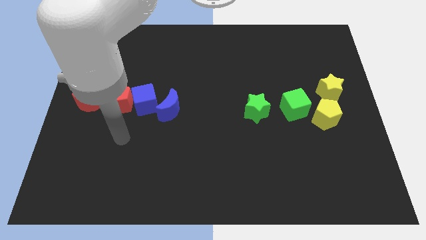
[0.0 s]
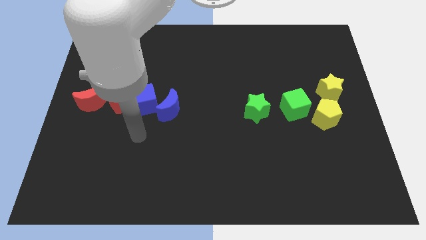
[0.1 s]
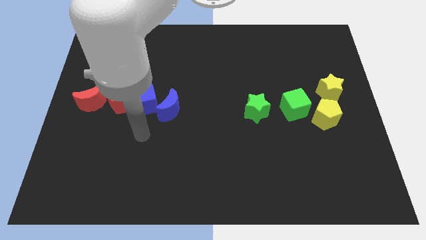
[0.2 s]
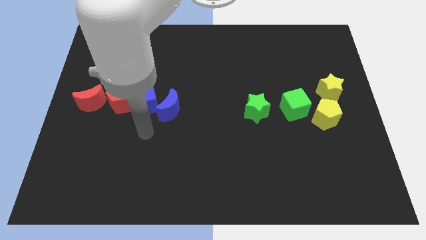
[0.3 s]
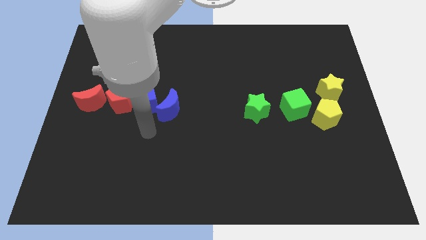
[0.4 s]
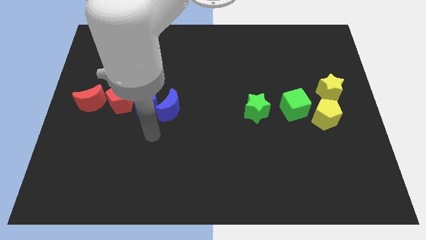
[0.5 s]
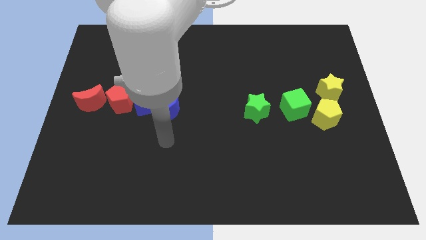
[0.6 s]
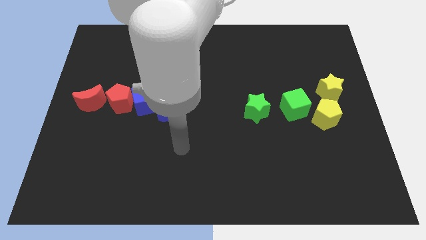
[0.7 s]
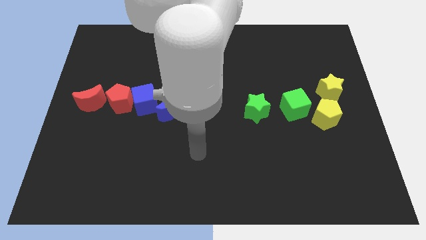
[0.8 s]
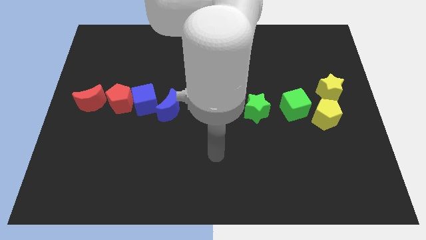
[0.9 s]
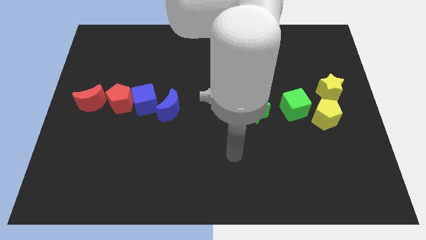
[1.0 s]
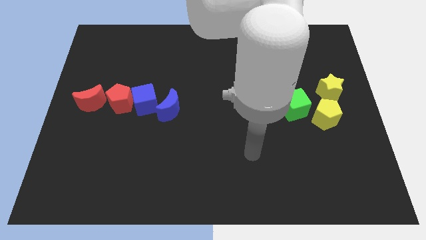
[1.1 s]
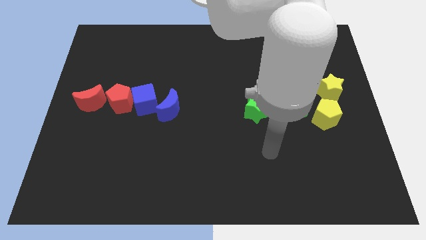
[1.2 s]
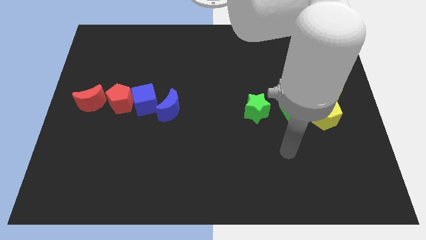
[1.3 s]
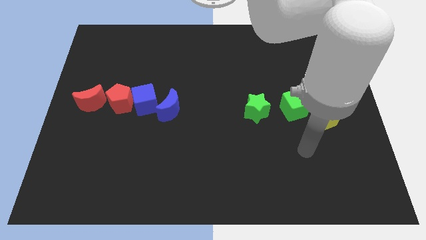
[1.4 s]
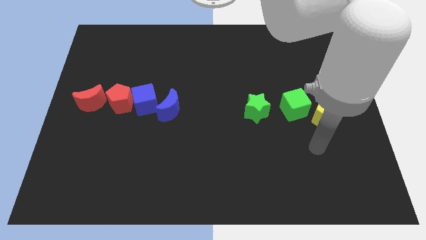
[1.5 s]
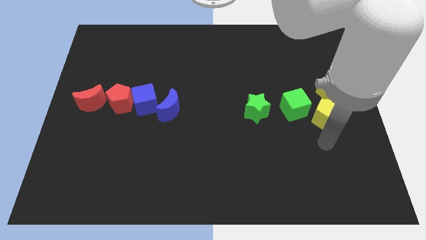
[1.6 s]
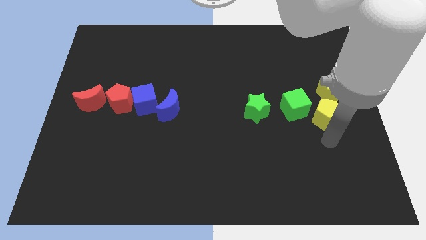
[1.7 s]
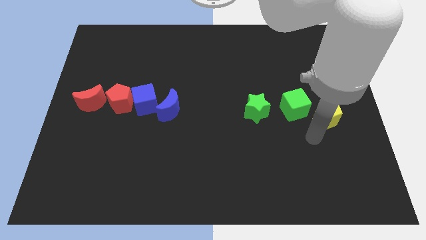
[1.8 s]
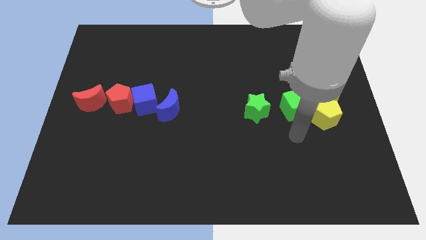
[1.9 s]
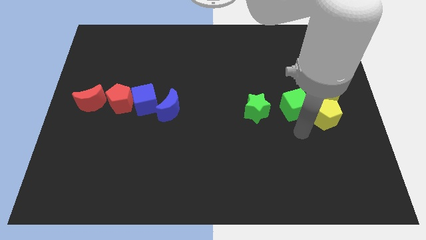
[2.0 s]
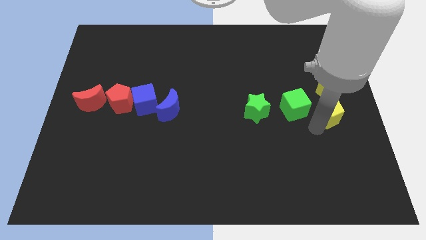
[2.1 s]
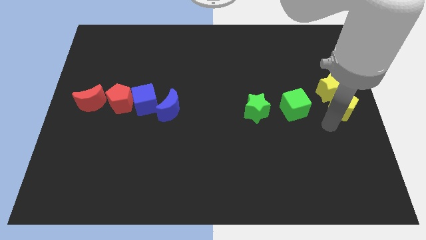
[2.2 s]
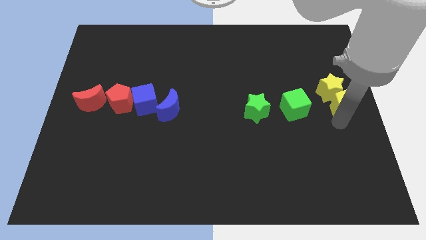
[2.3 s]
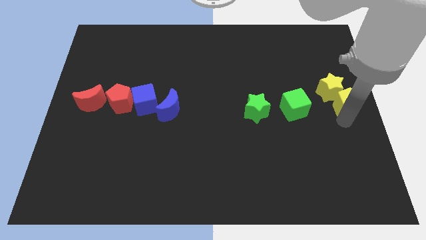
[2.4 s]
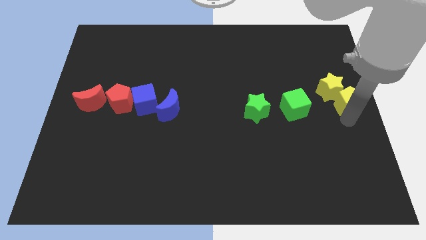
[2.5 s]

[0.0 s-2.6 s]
move yellow pentagon right below the yellow star

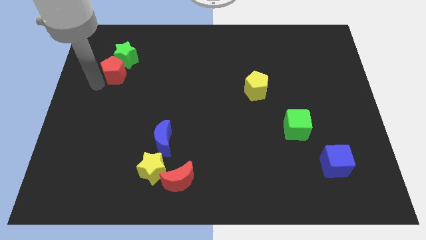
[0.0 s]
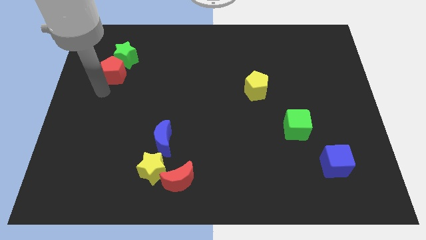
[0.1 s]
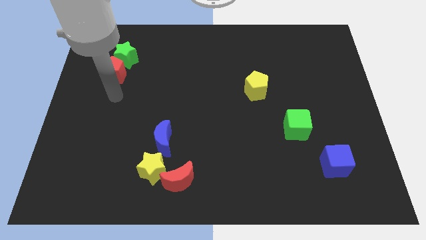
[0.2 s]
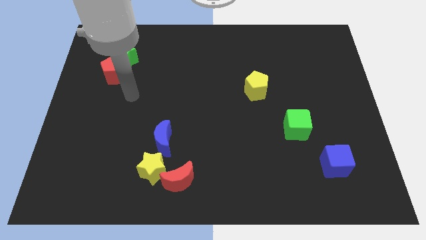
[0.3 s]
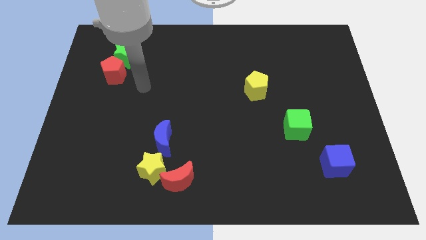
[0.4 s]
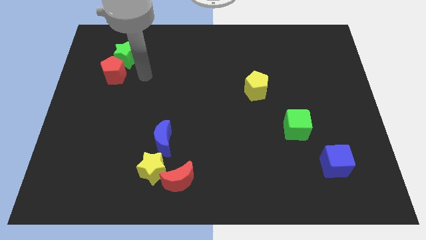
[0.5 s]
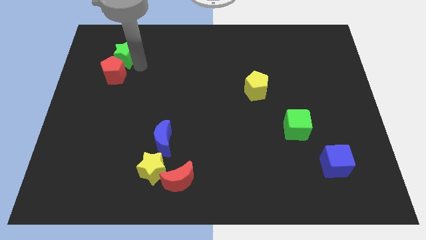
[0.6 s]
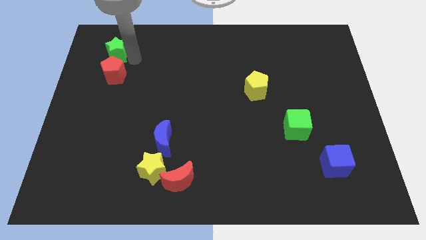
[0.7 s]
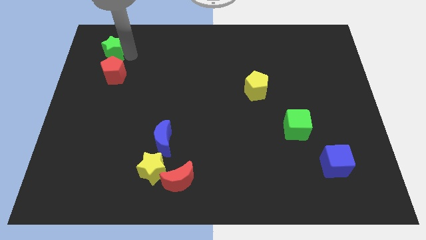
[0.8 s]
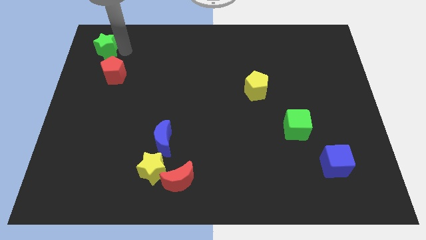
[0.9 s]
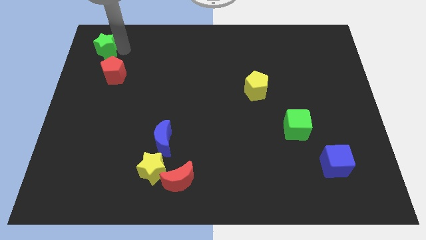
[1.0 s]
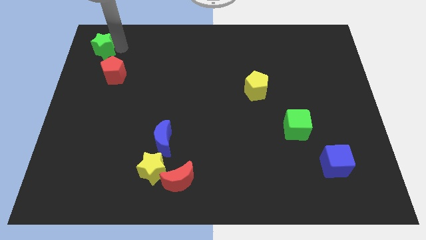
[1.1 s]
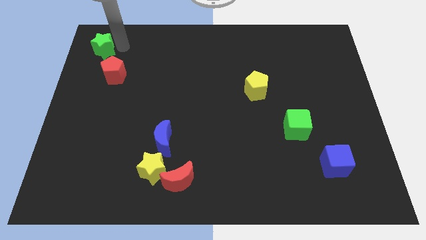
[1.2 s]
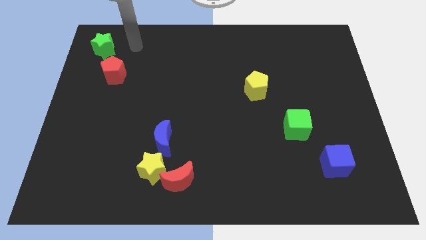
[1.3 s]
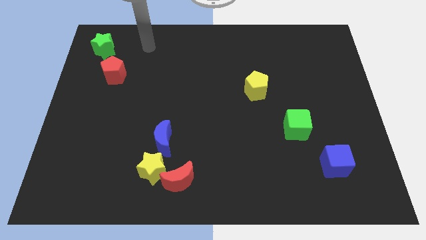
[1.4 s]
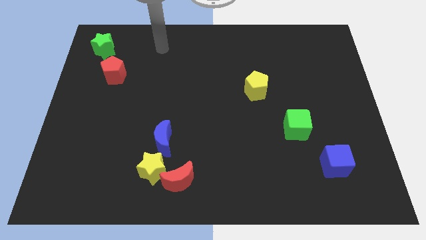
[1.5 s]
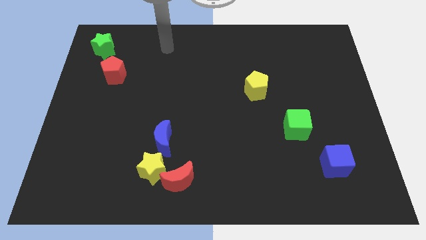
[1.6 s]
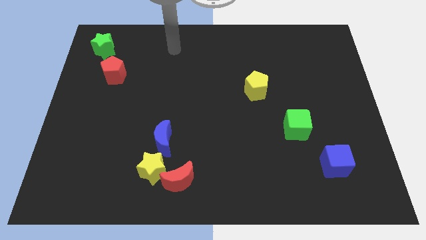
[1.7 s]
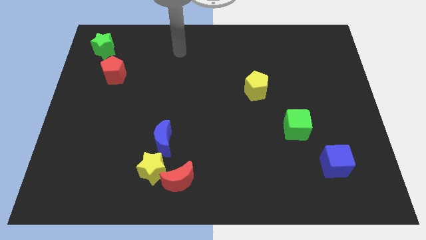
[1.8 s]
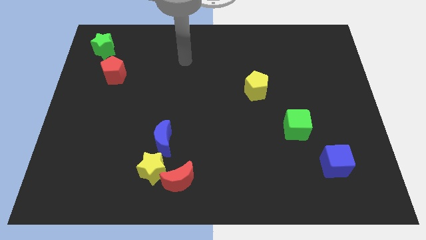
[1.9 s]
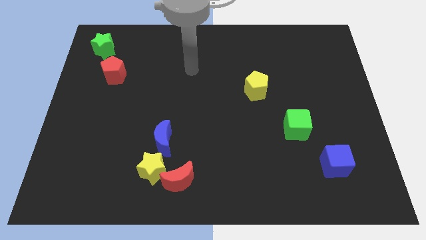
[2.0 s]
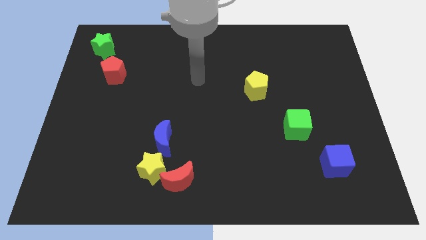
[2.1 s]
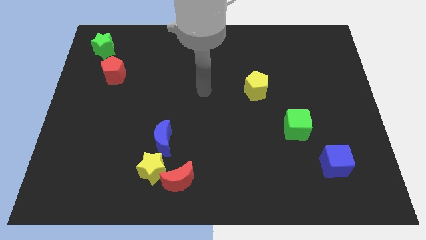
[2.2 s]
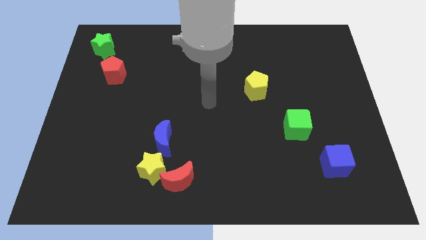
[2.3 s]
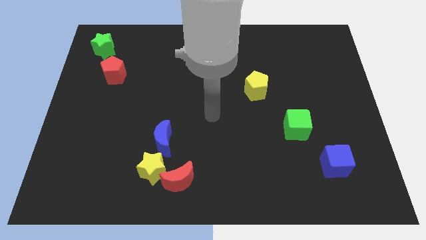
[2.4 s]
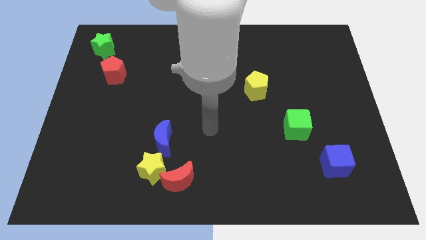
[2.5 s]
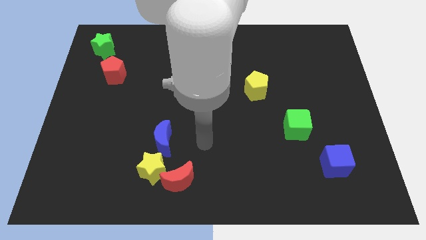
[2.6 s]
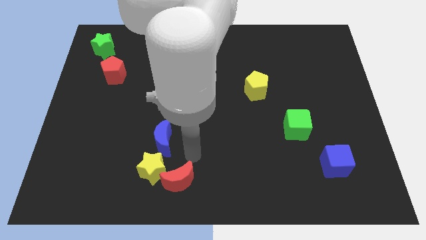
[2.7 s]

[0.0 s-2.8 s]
move the green star above the red pentagon

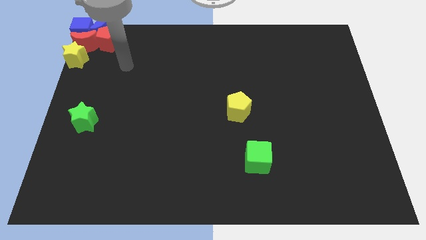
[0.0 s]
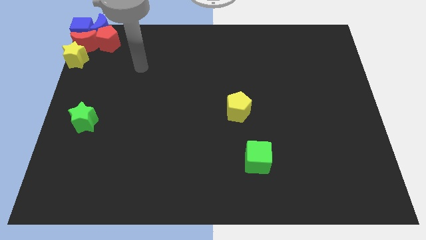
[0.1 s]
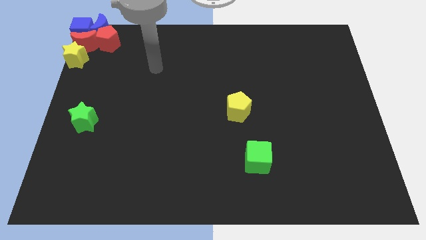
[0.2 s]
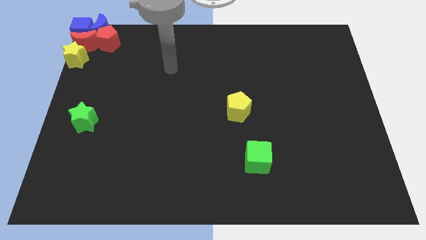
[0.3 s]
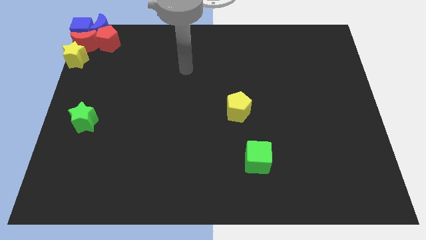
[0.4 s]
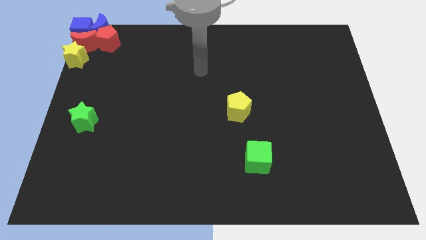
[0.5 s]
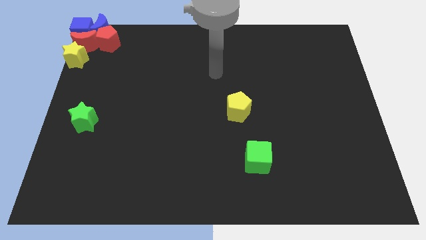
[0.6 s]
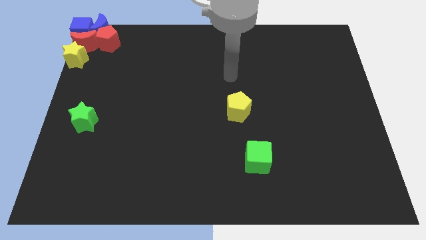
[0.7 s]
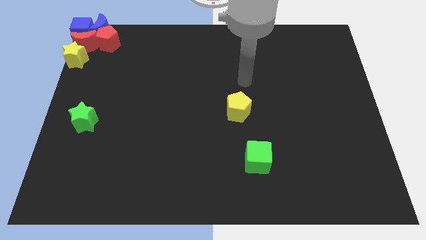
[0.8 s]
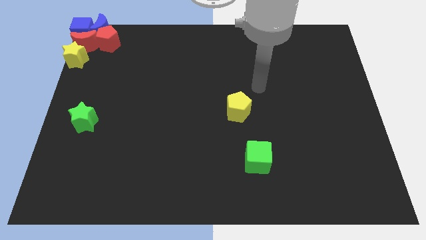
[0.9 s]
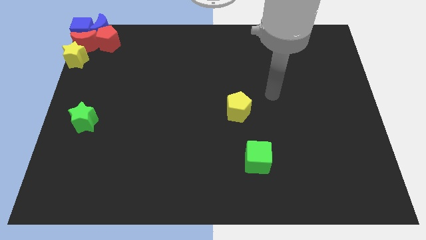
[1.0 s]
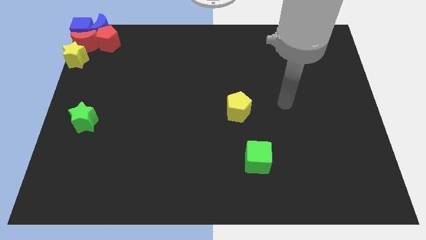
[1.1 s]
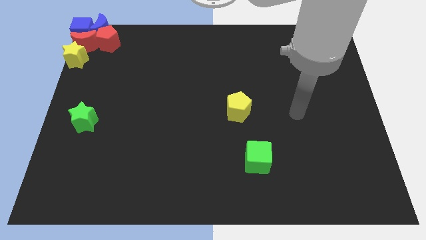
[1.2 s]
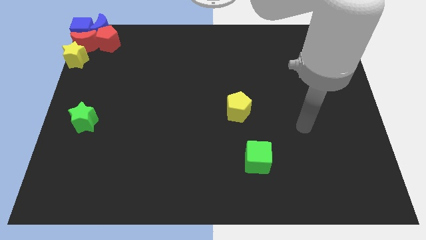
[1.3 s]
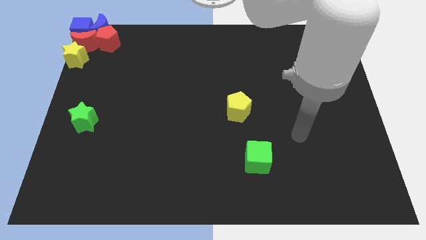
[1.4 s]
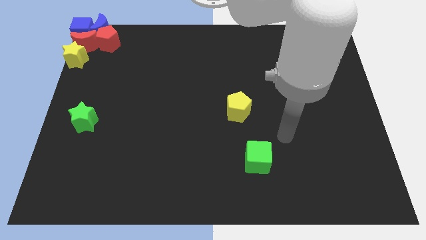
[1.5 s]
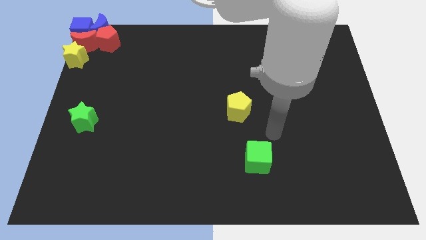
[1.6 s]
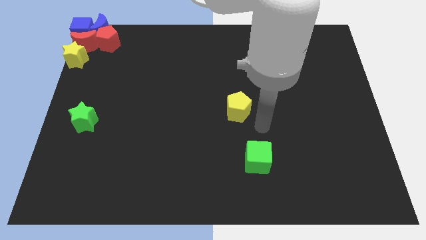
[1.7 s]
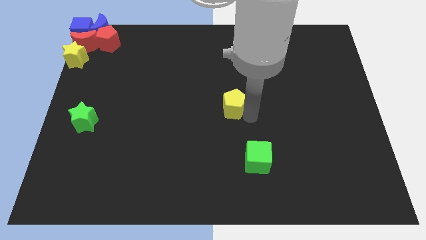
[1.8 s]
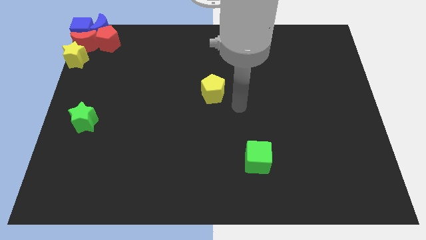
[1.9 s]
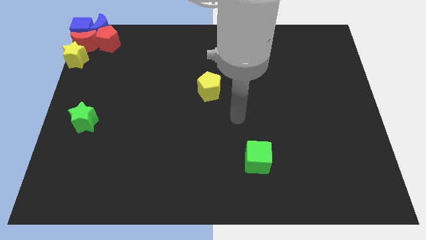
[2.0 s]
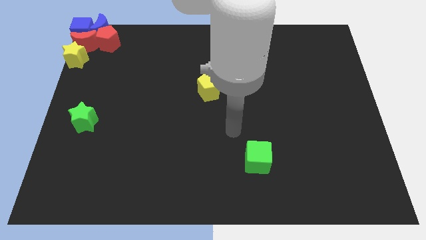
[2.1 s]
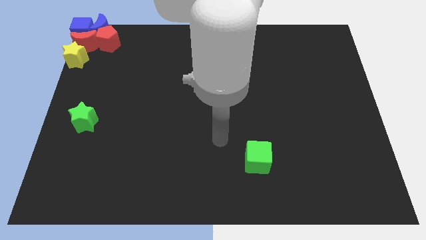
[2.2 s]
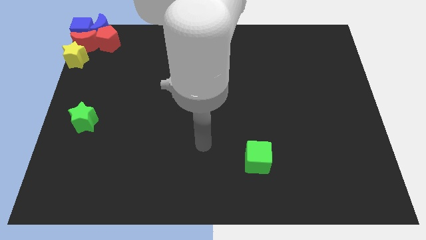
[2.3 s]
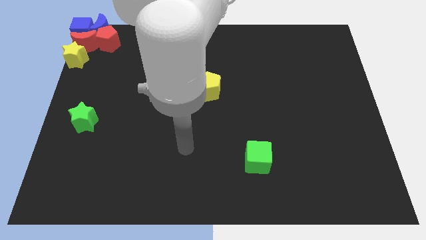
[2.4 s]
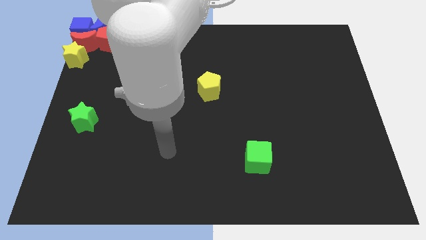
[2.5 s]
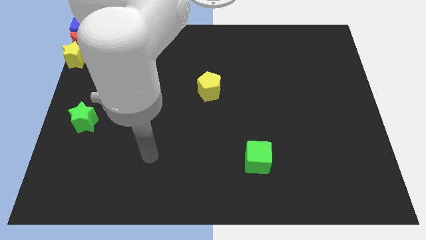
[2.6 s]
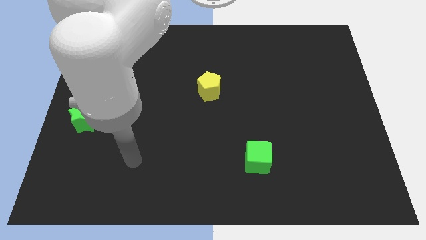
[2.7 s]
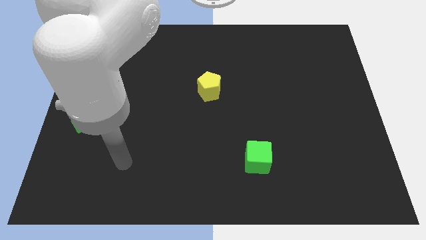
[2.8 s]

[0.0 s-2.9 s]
put the yellow pentagon at the center of the board

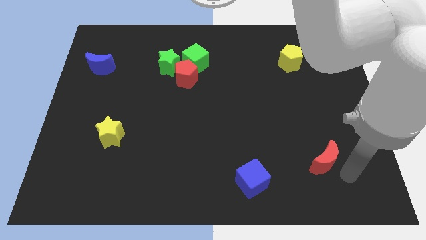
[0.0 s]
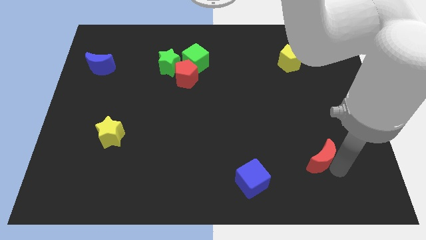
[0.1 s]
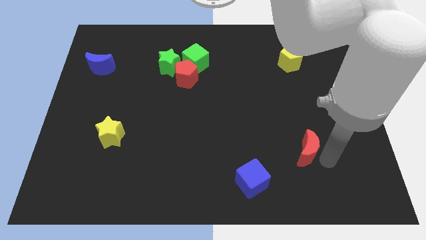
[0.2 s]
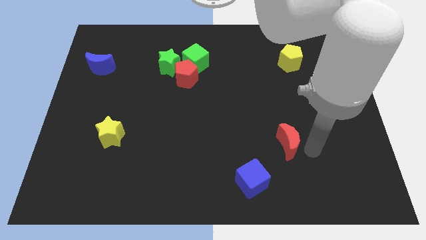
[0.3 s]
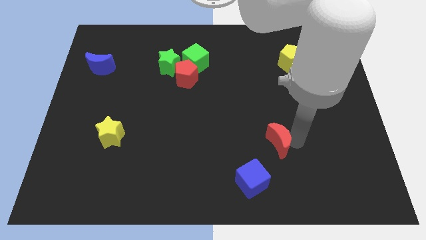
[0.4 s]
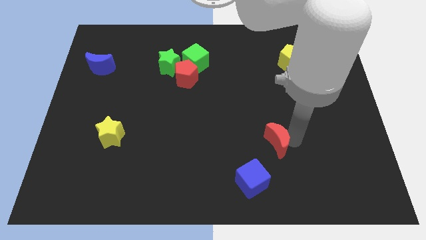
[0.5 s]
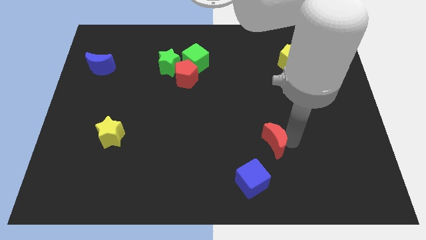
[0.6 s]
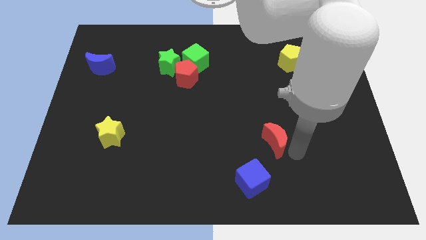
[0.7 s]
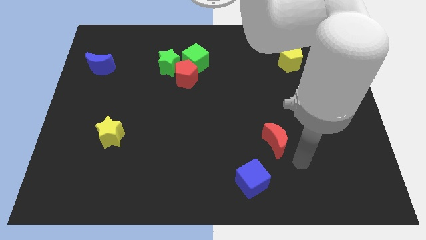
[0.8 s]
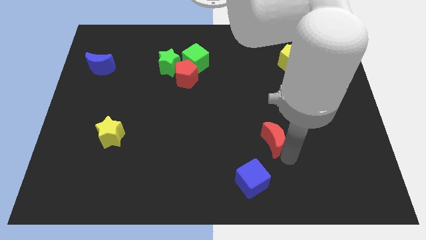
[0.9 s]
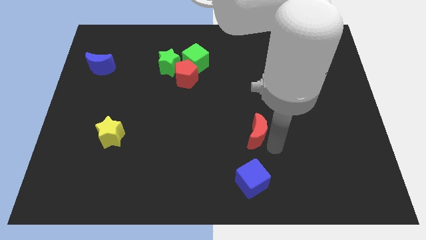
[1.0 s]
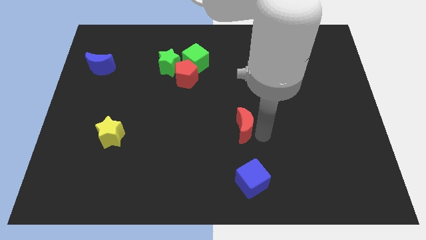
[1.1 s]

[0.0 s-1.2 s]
place red crescent above blue cube
